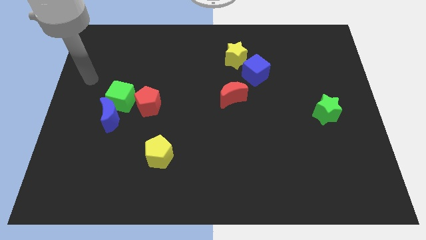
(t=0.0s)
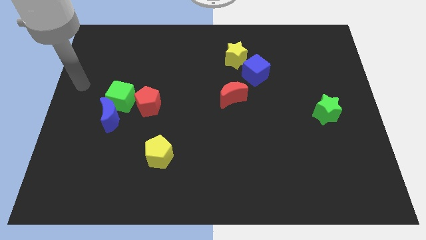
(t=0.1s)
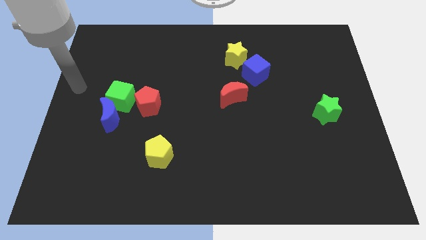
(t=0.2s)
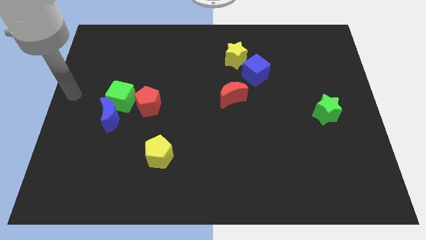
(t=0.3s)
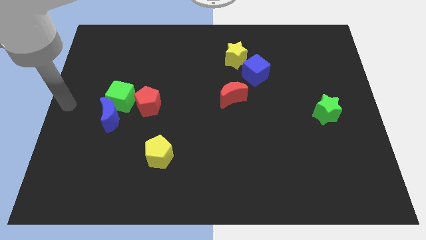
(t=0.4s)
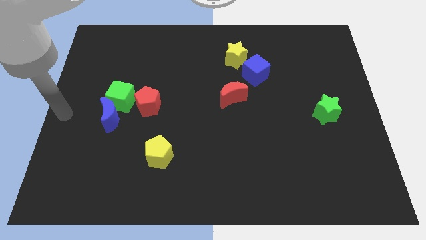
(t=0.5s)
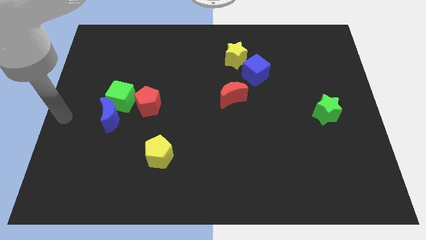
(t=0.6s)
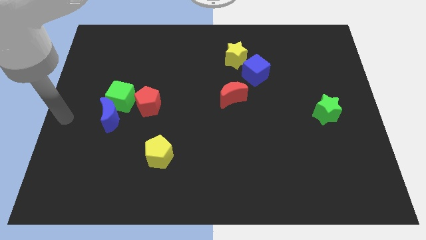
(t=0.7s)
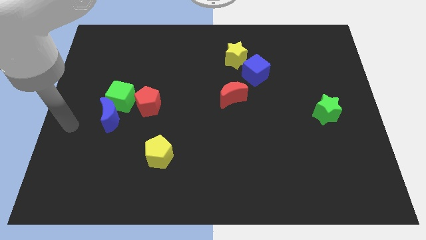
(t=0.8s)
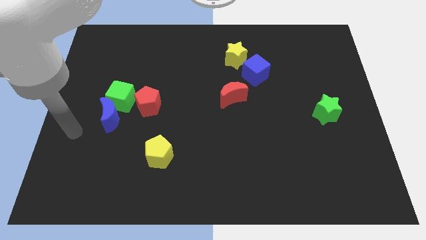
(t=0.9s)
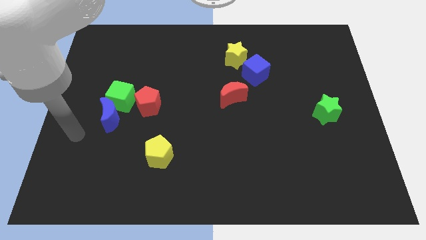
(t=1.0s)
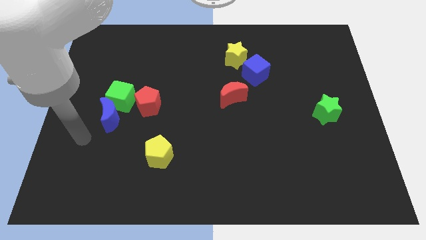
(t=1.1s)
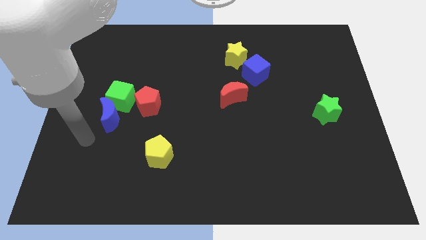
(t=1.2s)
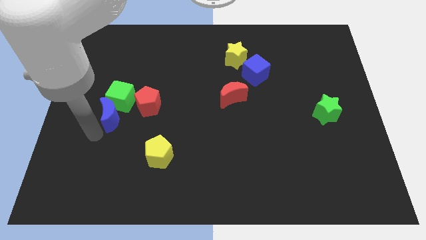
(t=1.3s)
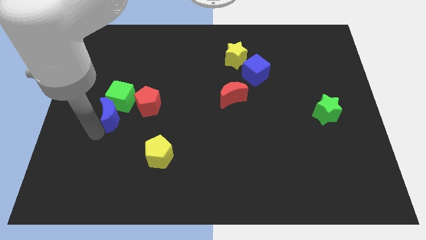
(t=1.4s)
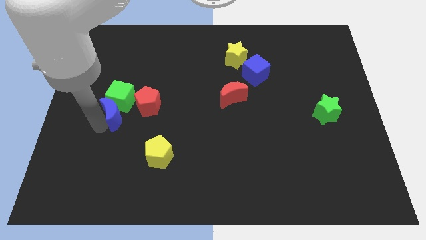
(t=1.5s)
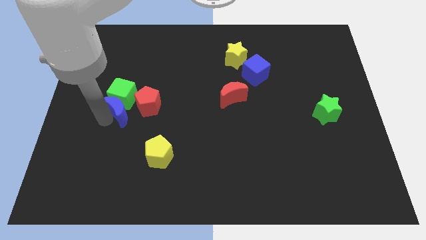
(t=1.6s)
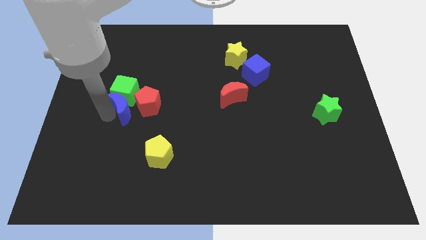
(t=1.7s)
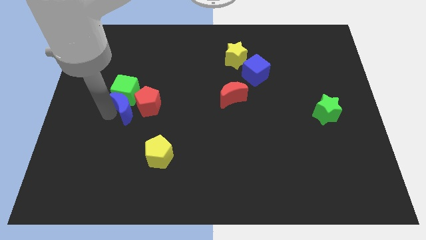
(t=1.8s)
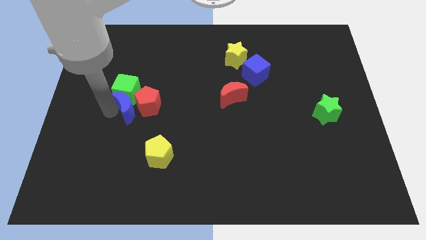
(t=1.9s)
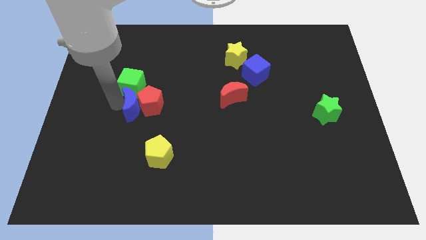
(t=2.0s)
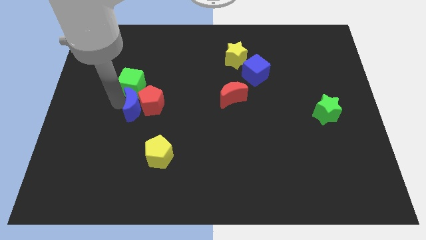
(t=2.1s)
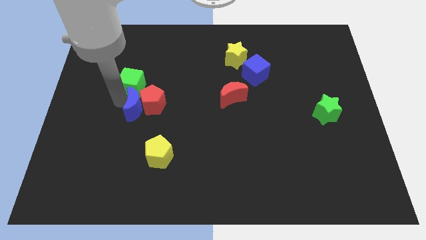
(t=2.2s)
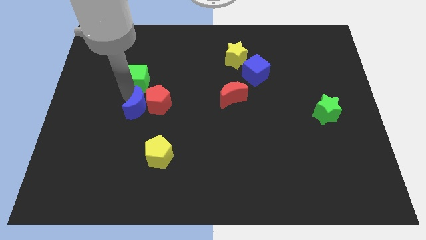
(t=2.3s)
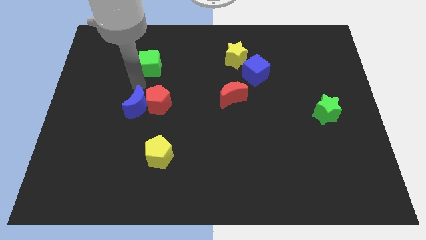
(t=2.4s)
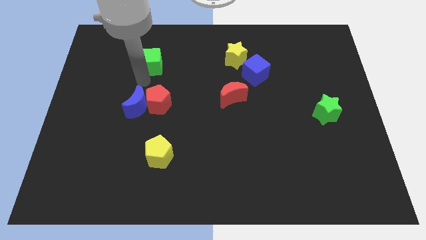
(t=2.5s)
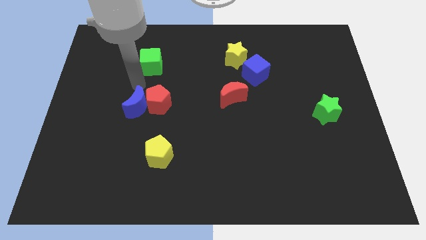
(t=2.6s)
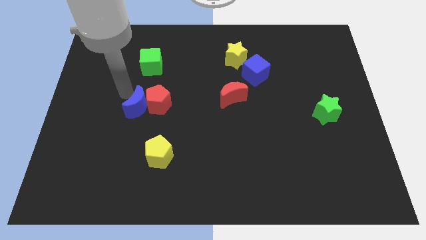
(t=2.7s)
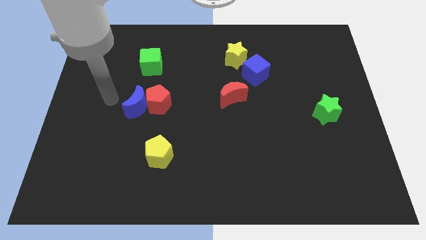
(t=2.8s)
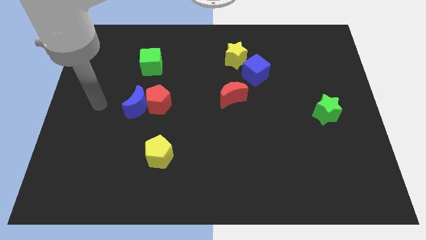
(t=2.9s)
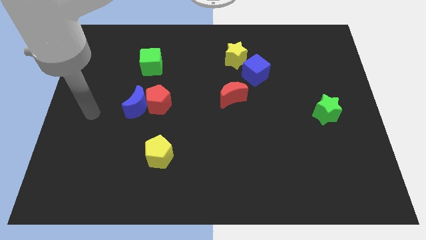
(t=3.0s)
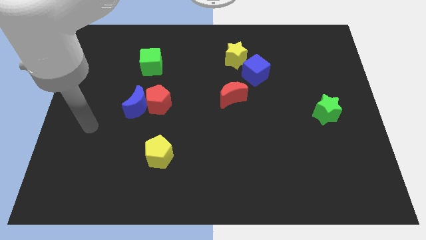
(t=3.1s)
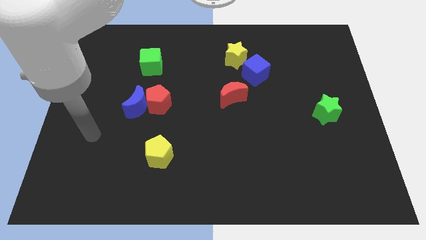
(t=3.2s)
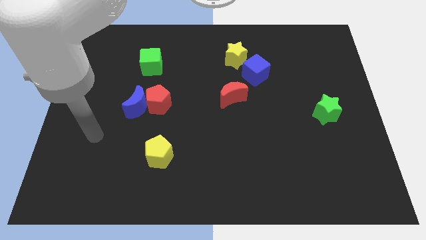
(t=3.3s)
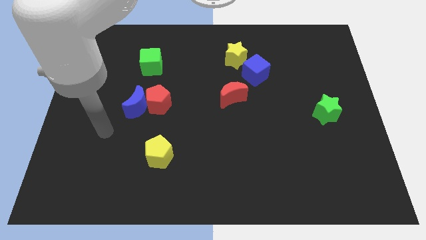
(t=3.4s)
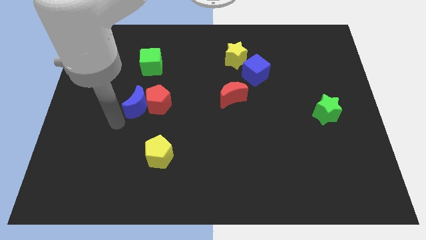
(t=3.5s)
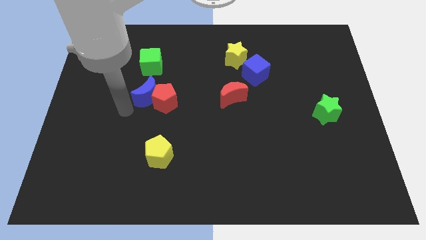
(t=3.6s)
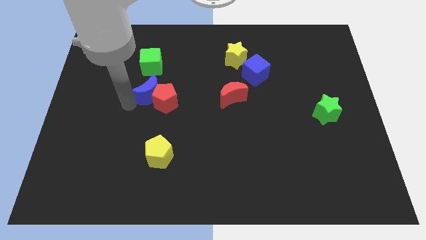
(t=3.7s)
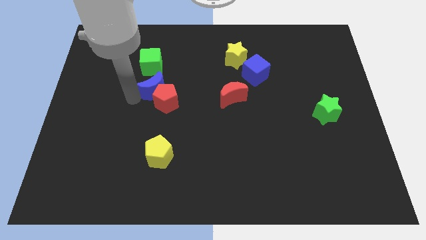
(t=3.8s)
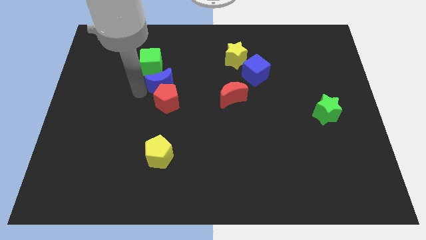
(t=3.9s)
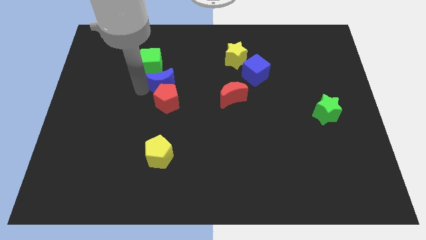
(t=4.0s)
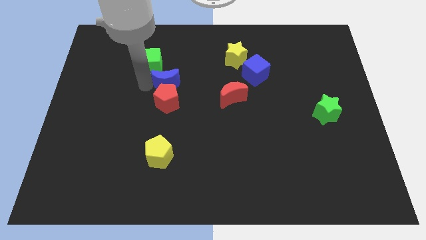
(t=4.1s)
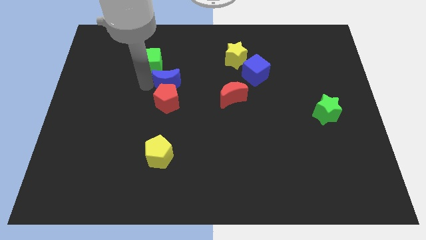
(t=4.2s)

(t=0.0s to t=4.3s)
place blue moon to the top of red pentagon

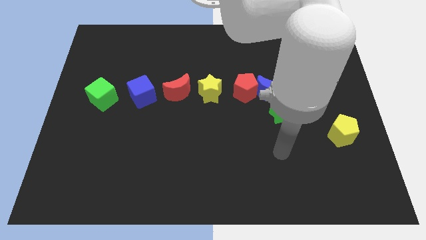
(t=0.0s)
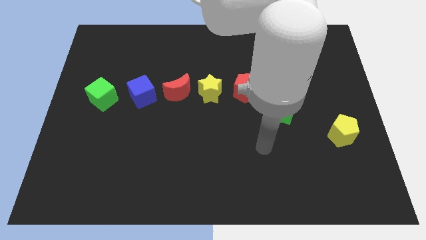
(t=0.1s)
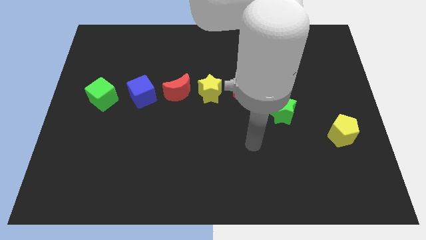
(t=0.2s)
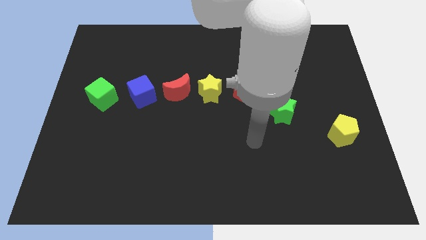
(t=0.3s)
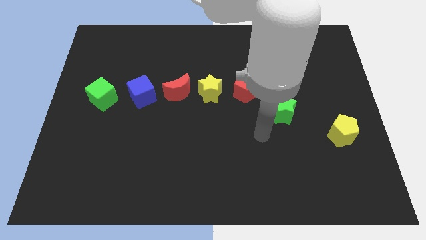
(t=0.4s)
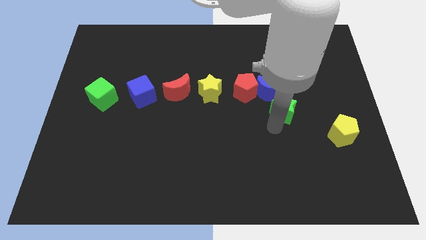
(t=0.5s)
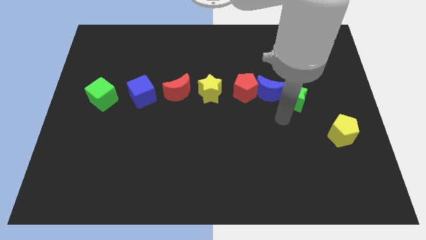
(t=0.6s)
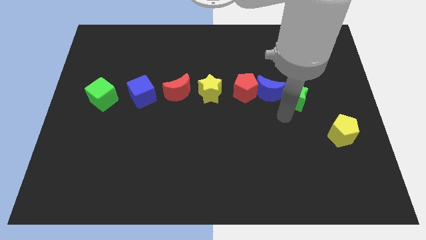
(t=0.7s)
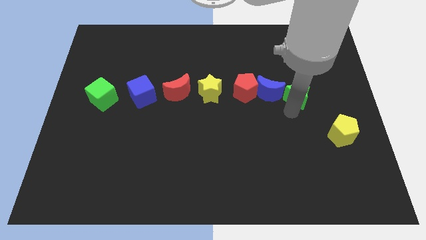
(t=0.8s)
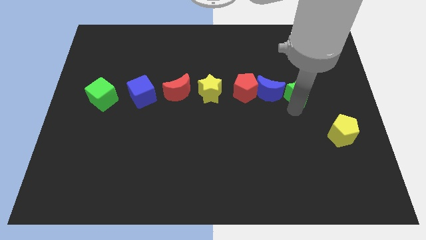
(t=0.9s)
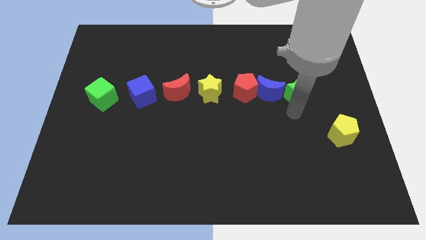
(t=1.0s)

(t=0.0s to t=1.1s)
place the green star right to the blue moon

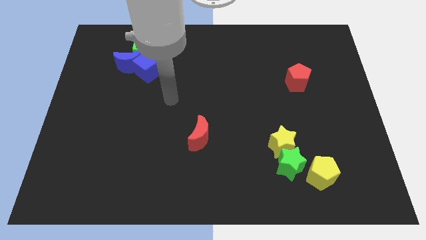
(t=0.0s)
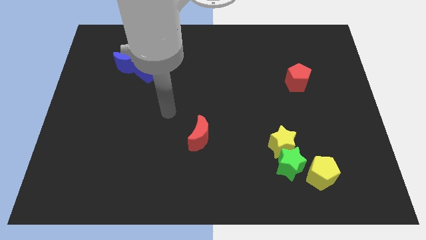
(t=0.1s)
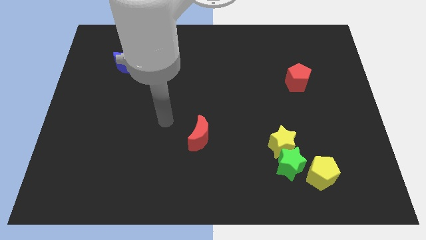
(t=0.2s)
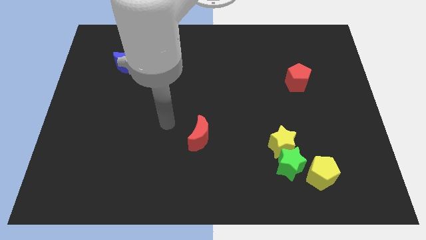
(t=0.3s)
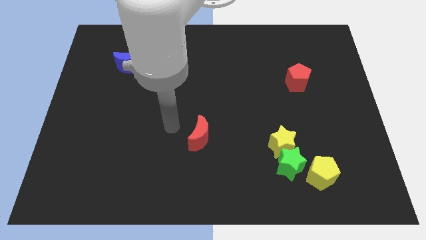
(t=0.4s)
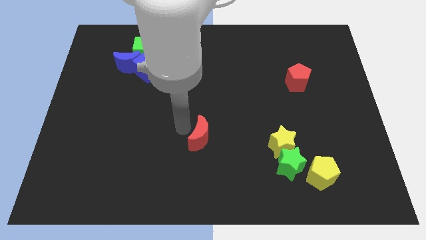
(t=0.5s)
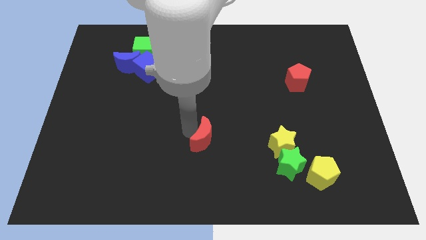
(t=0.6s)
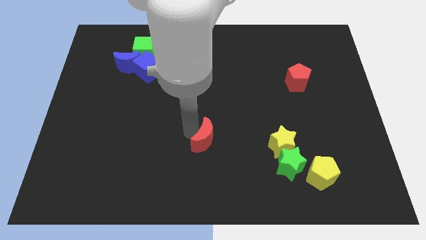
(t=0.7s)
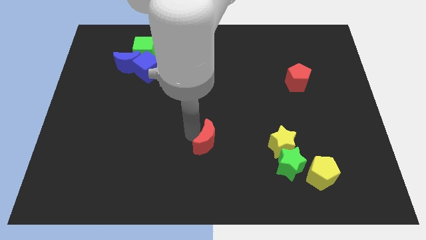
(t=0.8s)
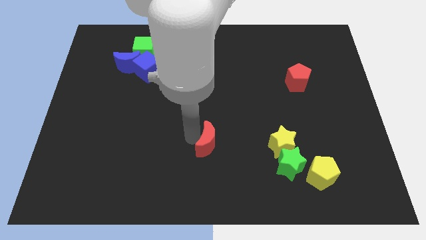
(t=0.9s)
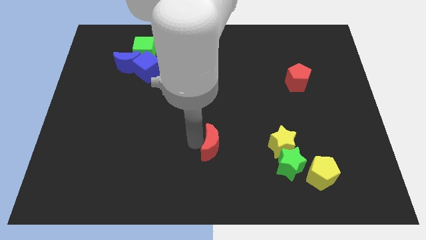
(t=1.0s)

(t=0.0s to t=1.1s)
move your arm near red moon

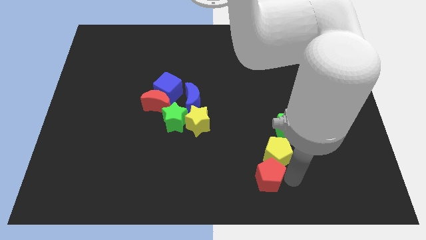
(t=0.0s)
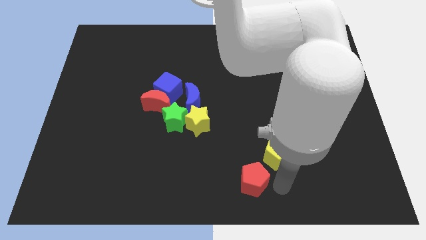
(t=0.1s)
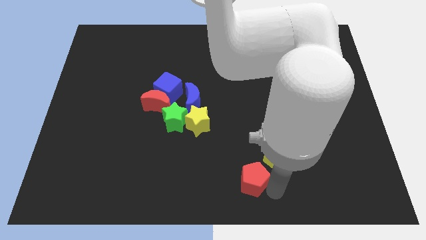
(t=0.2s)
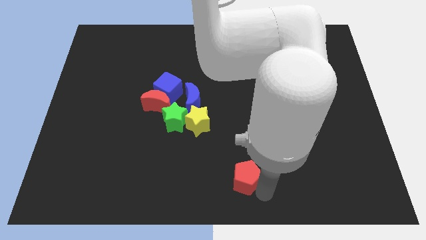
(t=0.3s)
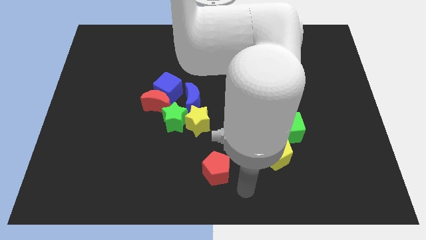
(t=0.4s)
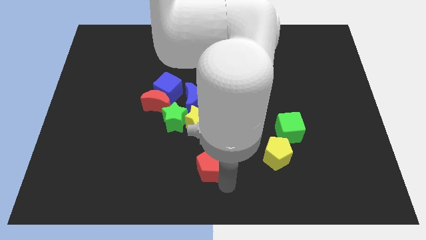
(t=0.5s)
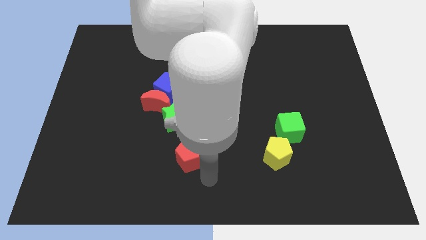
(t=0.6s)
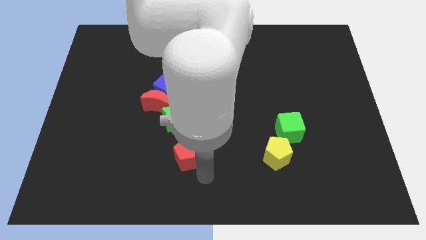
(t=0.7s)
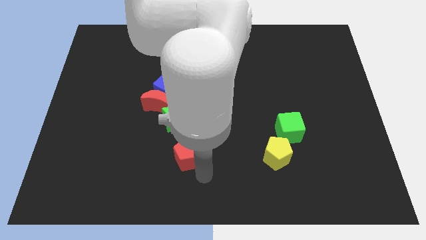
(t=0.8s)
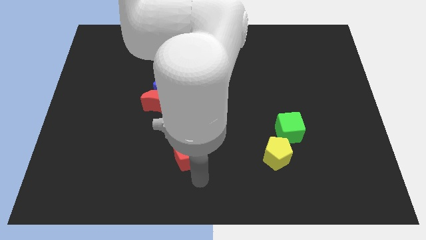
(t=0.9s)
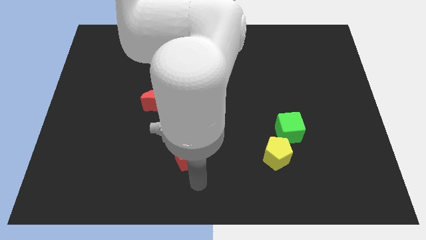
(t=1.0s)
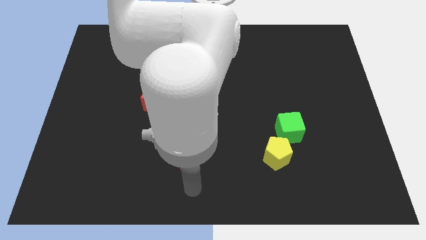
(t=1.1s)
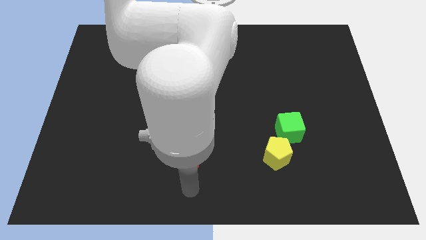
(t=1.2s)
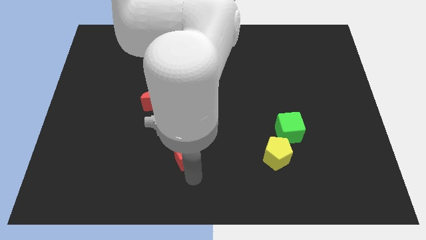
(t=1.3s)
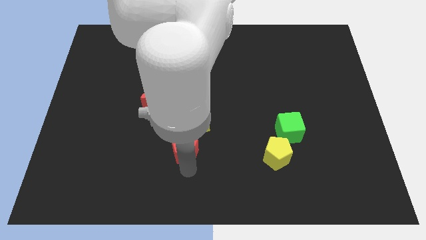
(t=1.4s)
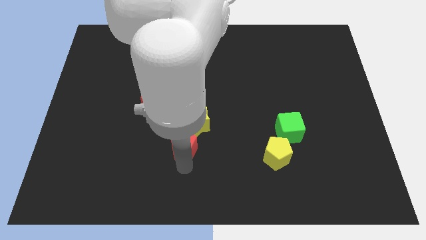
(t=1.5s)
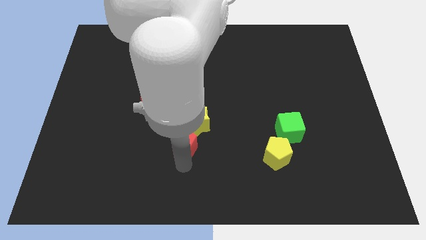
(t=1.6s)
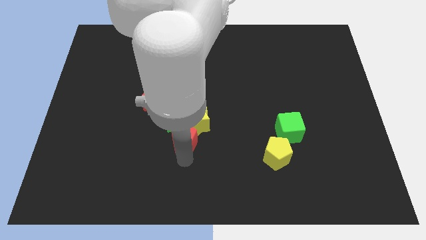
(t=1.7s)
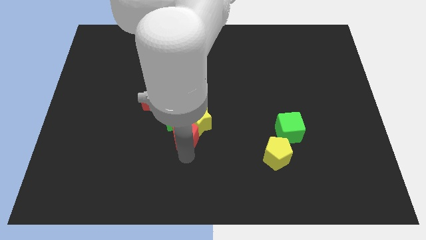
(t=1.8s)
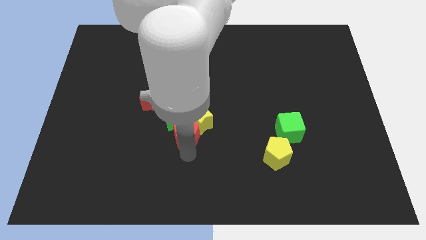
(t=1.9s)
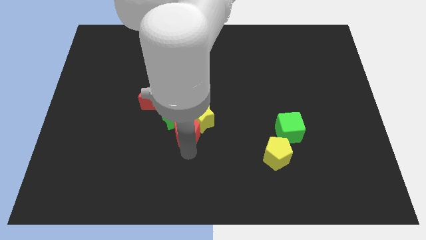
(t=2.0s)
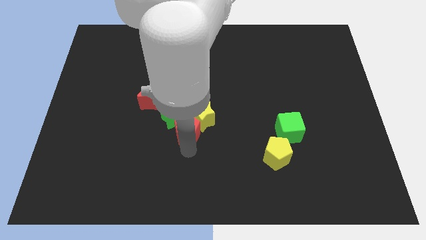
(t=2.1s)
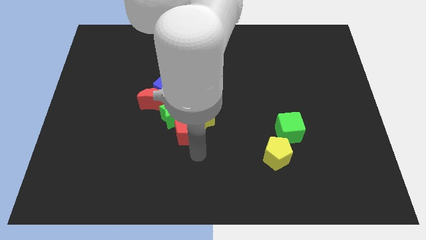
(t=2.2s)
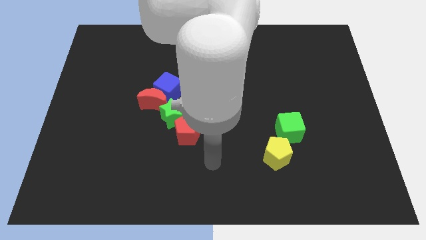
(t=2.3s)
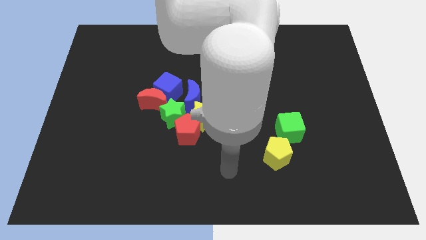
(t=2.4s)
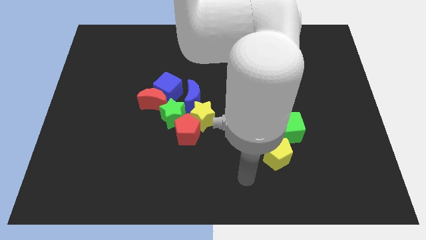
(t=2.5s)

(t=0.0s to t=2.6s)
push the red pentagon into the group of stars
